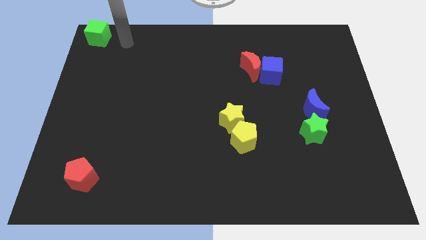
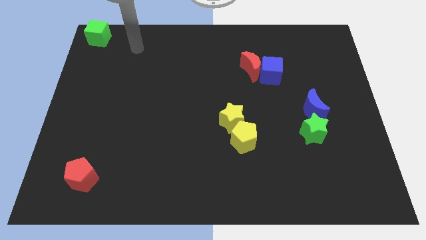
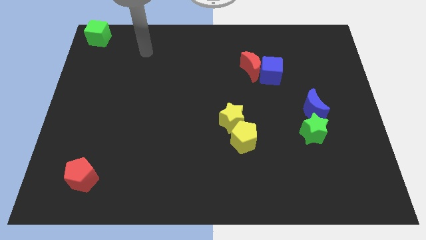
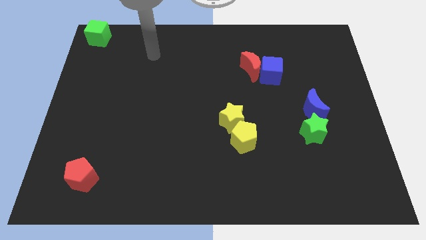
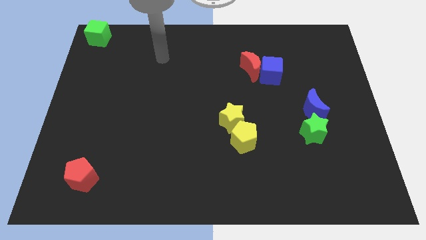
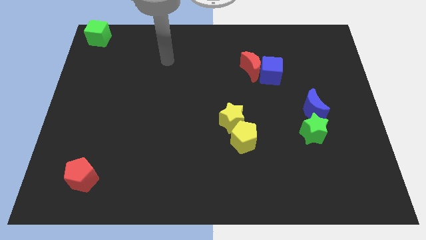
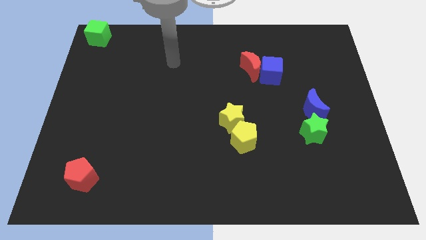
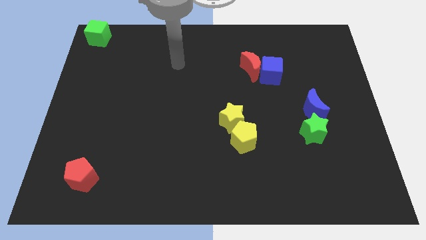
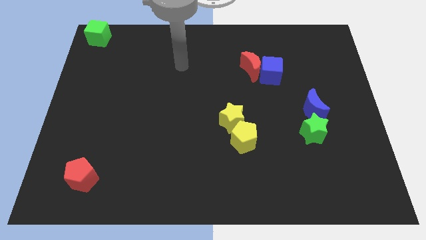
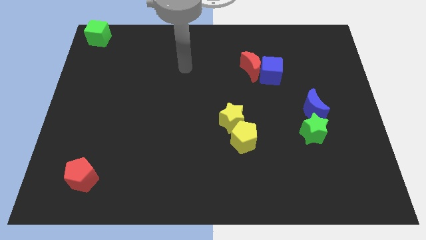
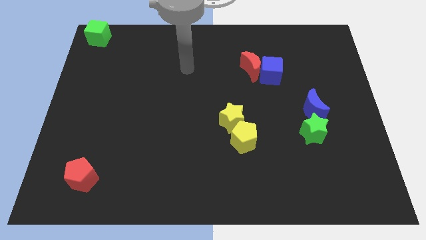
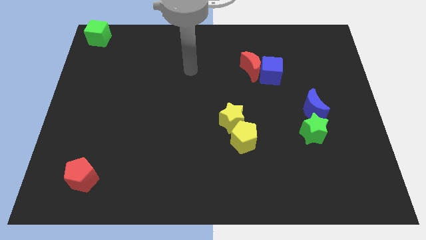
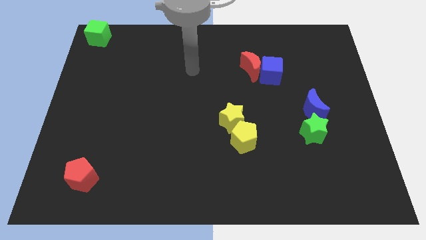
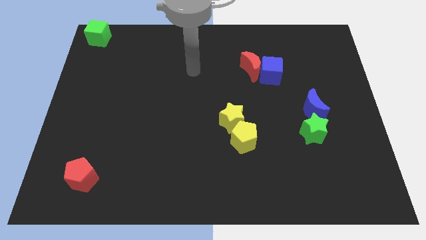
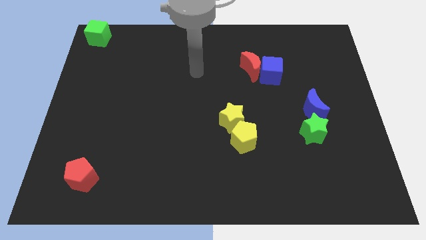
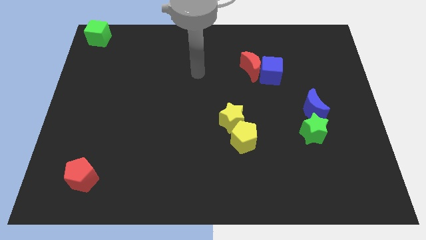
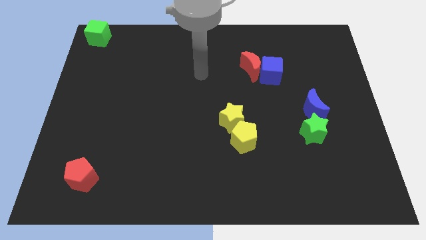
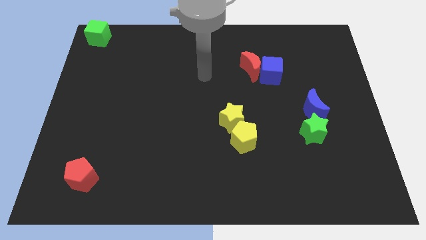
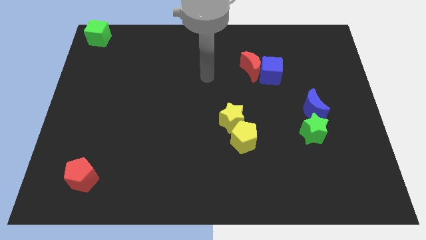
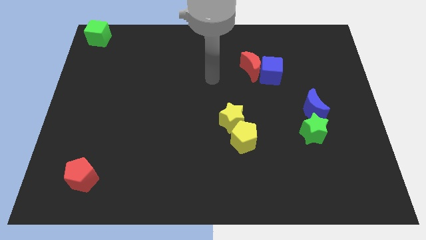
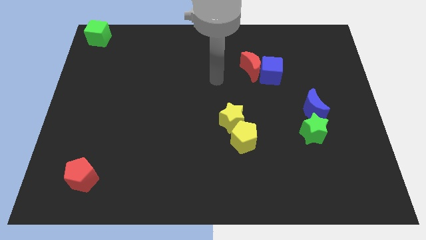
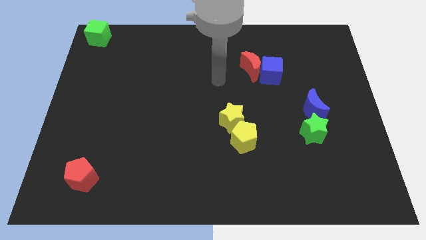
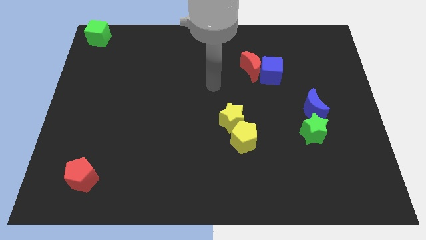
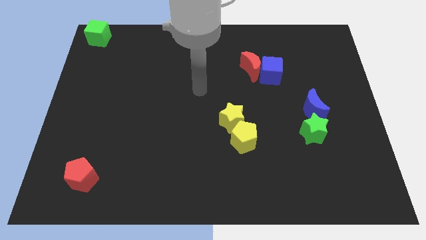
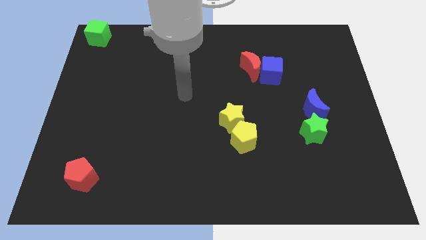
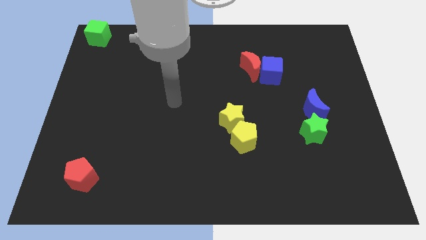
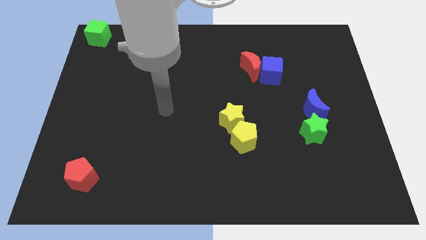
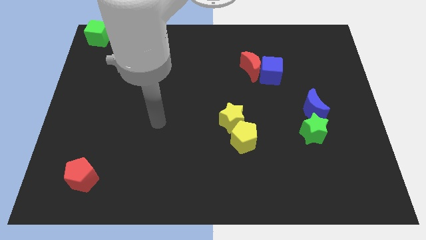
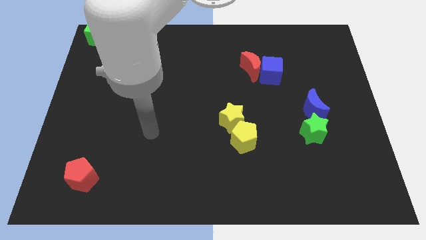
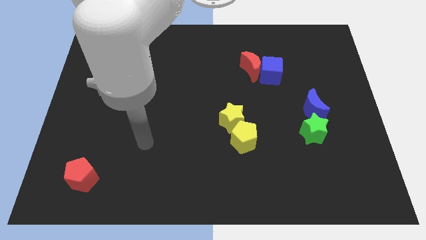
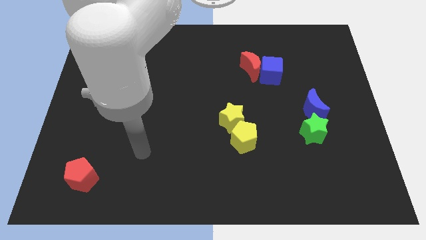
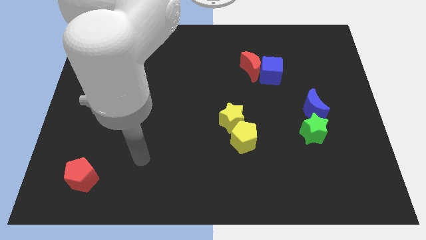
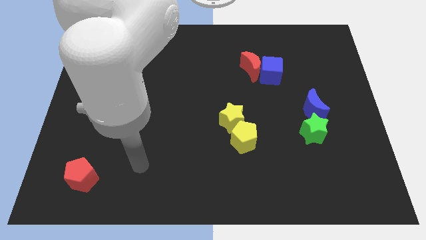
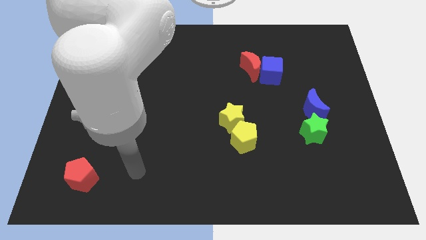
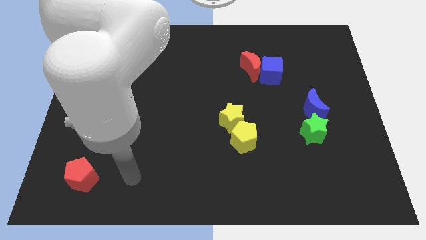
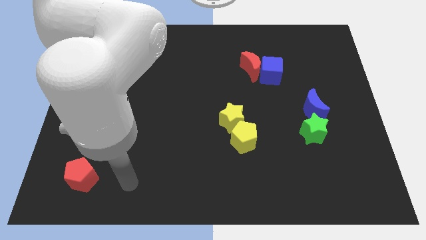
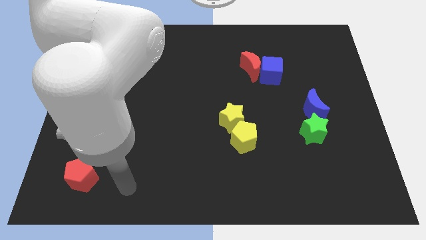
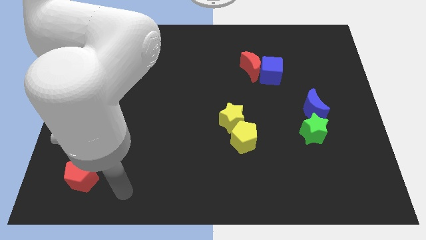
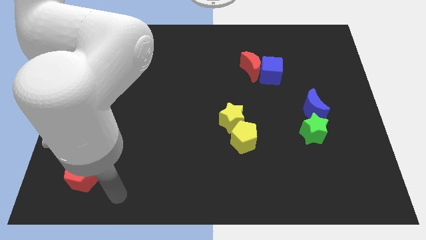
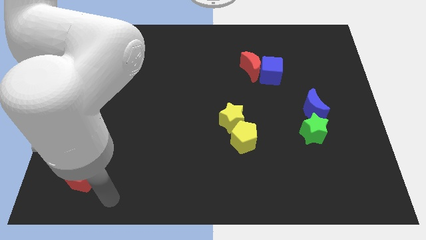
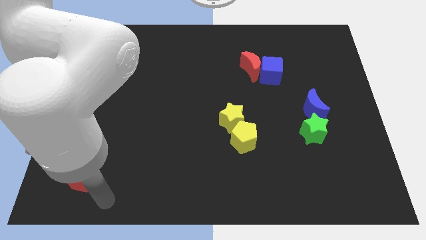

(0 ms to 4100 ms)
move your arm towards the red pentagon

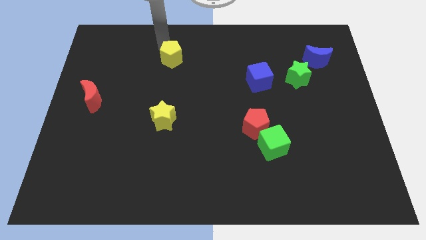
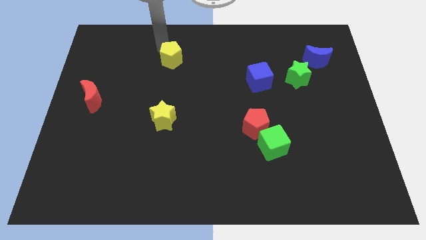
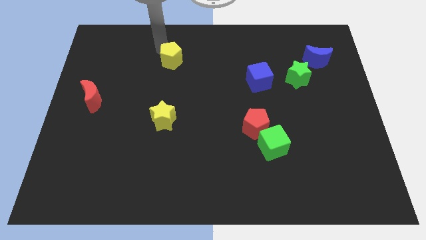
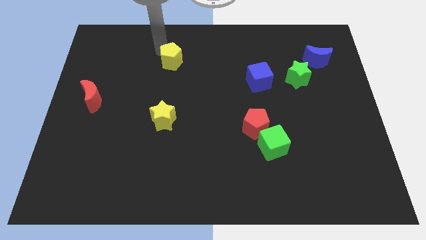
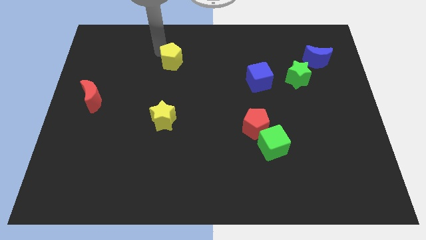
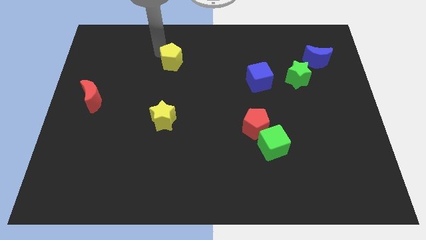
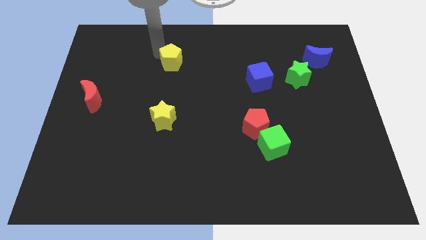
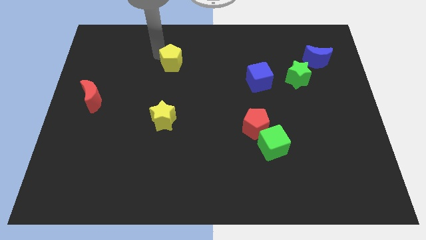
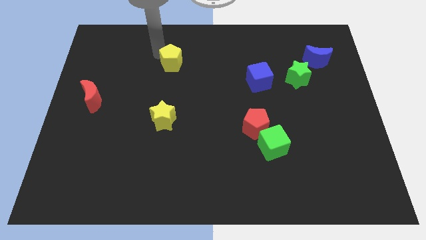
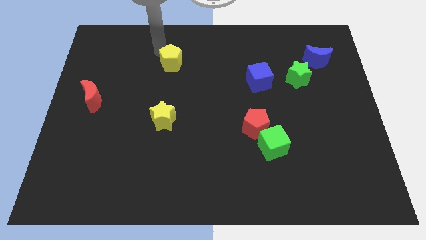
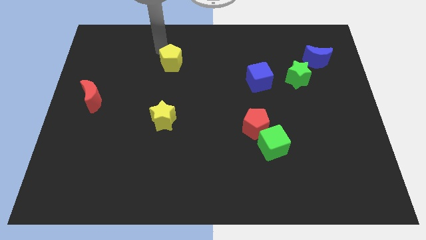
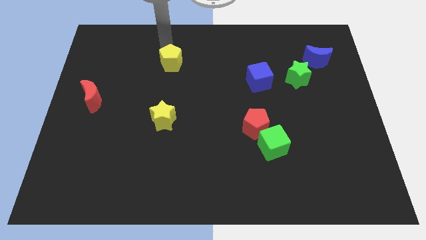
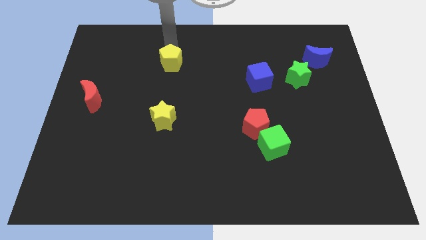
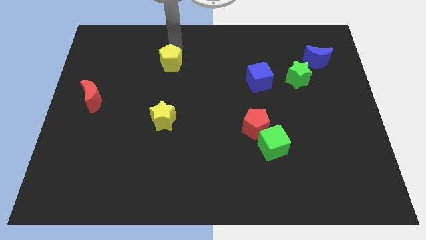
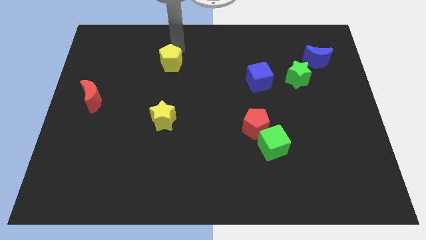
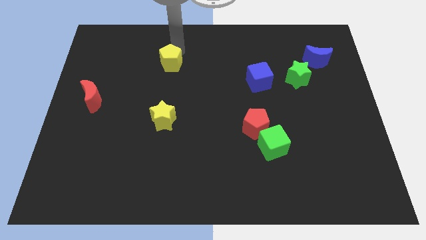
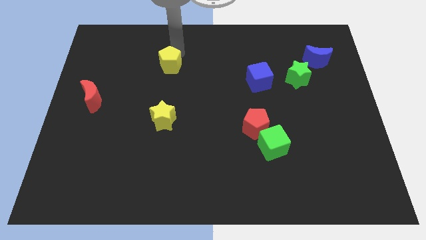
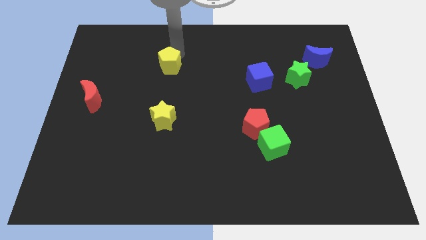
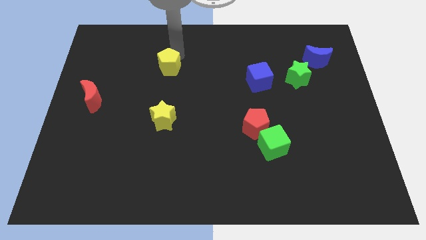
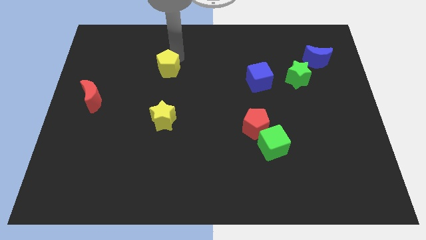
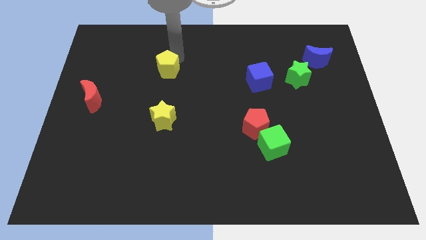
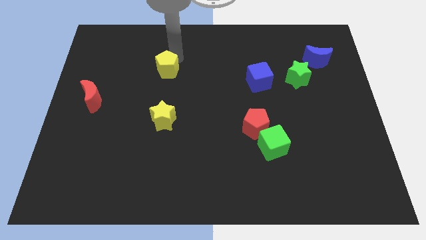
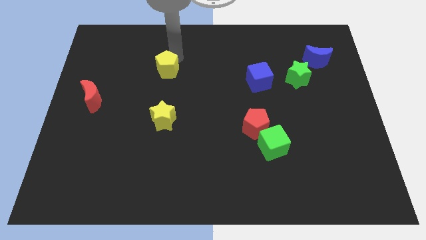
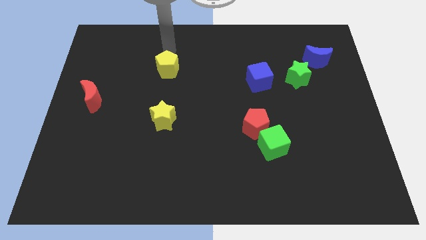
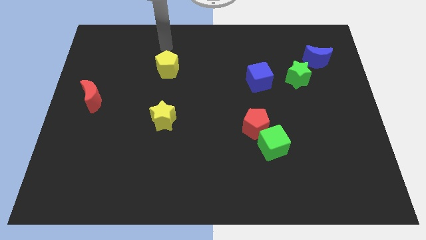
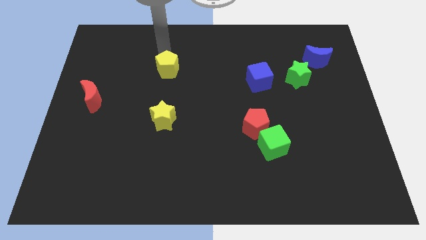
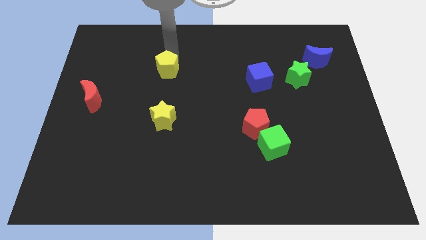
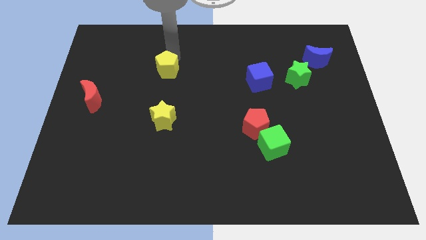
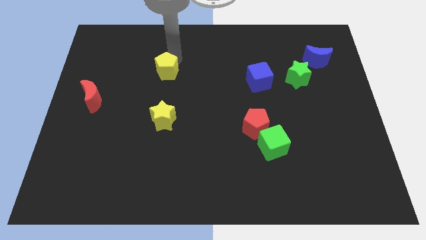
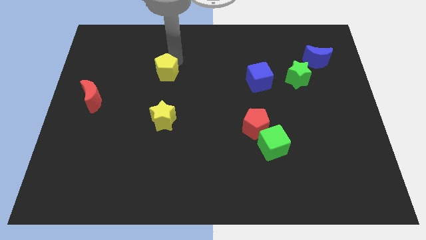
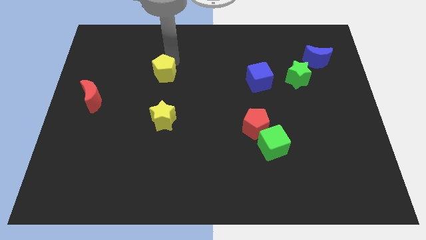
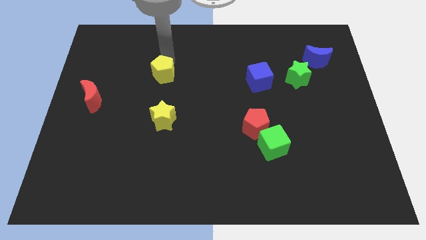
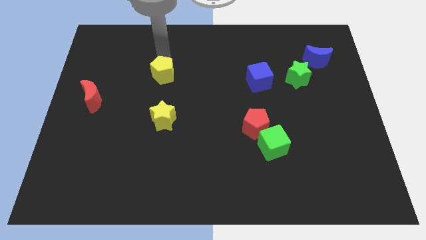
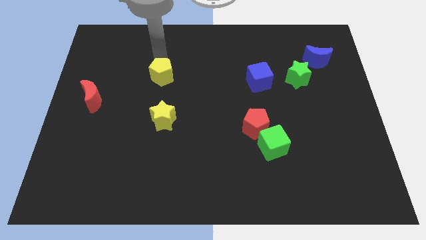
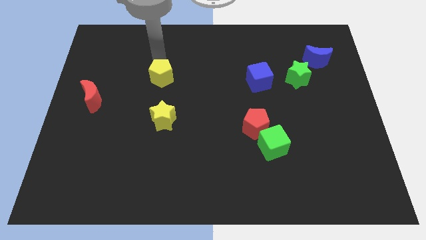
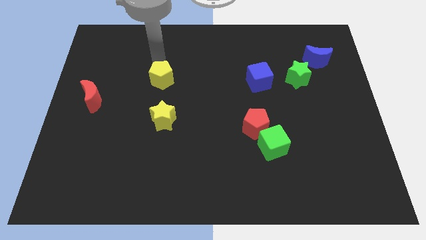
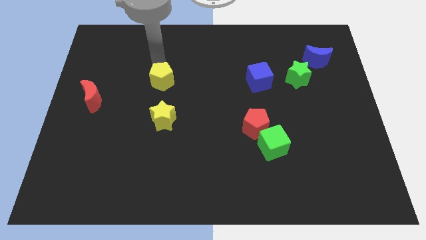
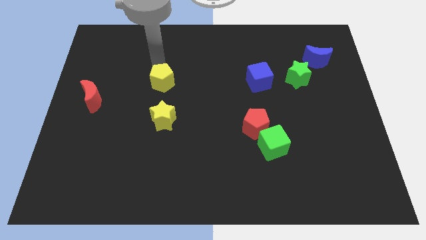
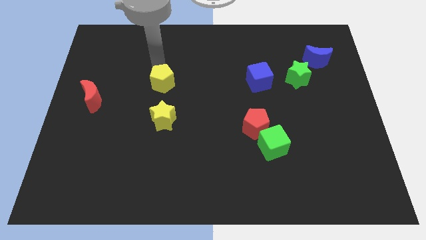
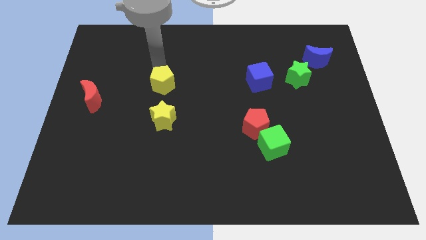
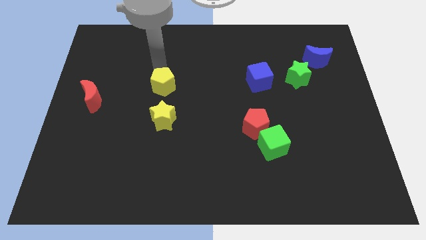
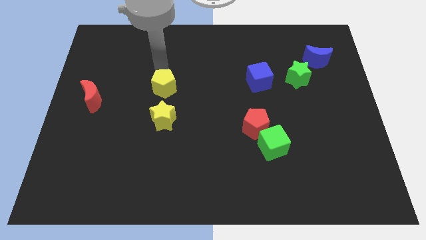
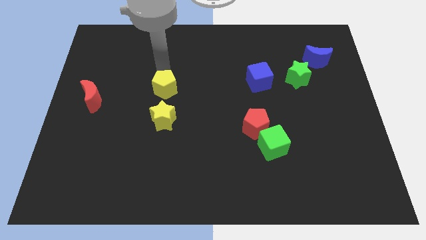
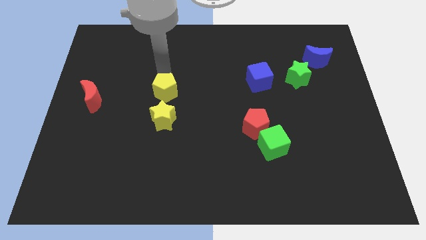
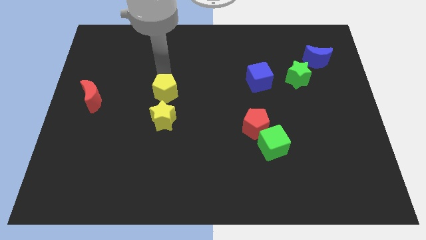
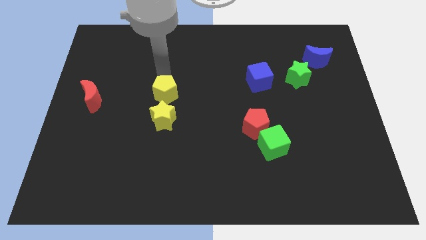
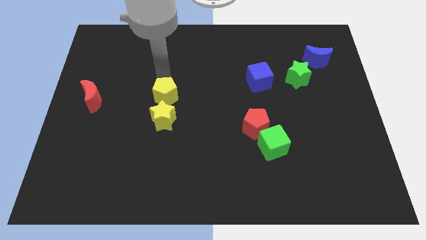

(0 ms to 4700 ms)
push the yellow pentagon to the top of the yellow star
